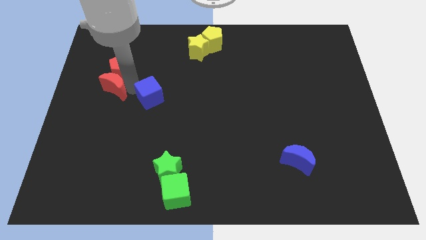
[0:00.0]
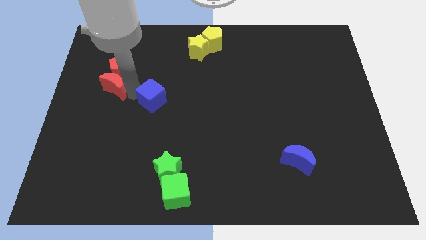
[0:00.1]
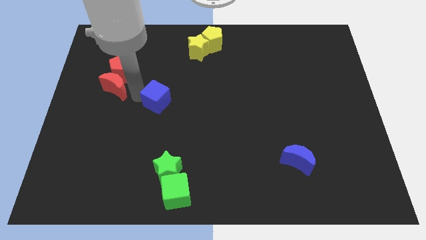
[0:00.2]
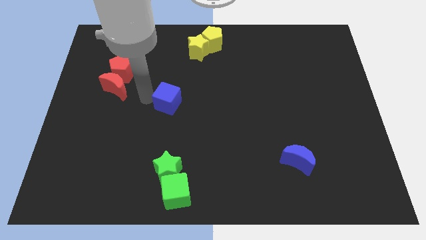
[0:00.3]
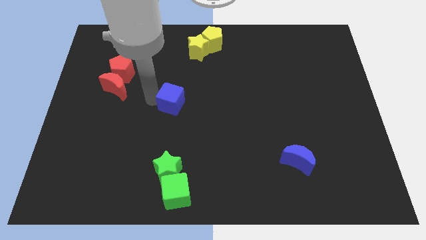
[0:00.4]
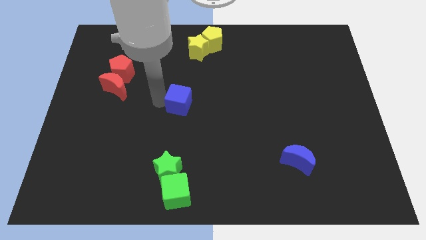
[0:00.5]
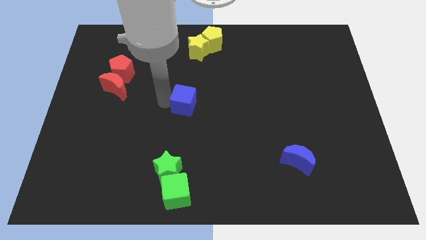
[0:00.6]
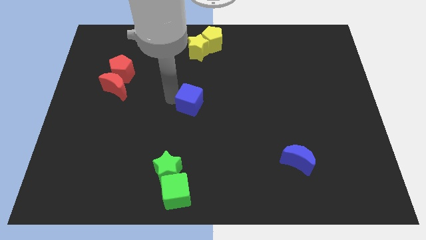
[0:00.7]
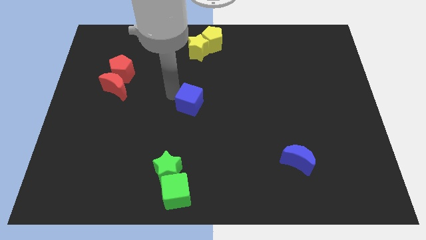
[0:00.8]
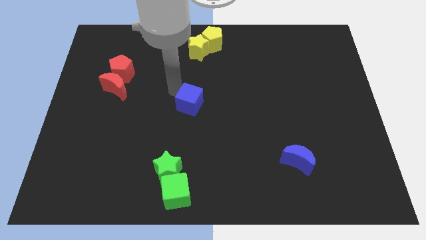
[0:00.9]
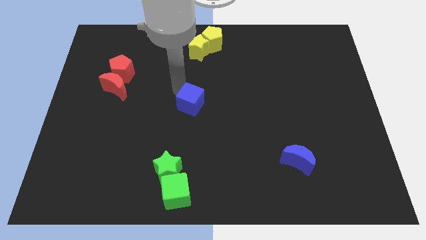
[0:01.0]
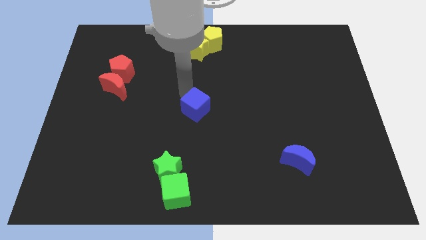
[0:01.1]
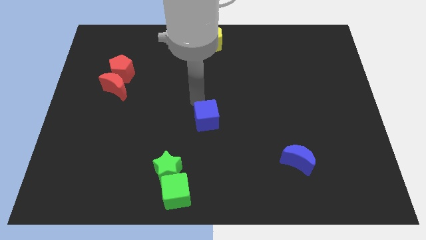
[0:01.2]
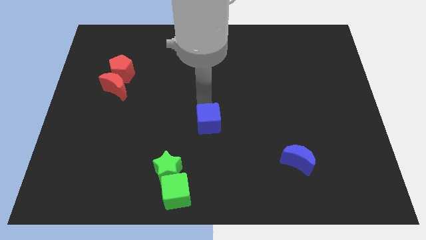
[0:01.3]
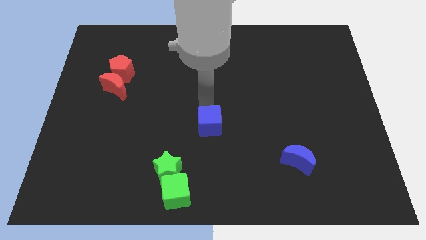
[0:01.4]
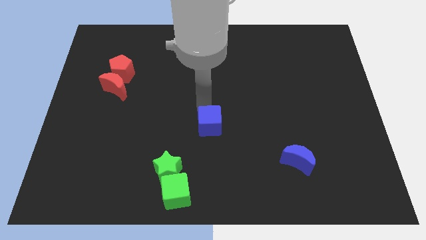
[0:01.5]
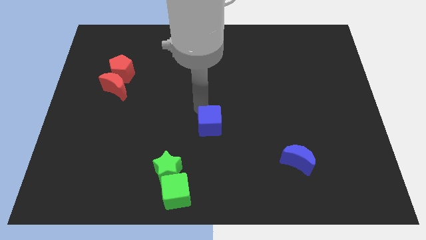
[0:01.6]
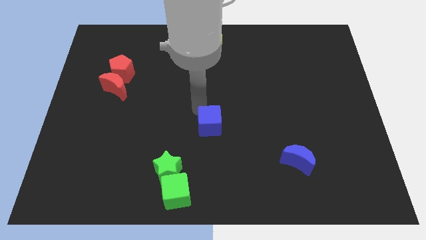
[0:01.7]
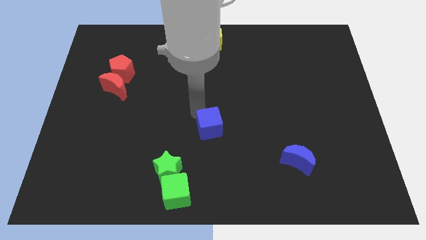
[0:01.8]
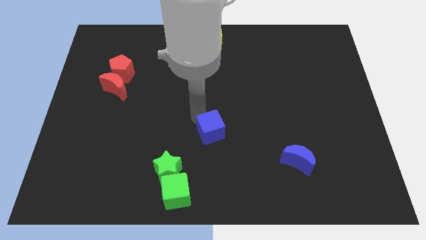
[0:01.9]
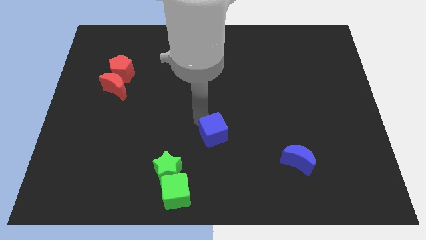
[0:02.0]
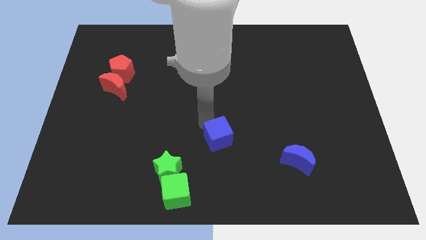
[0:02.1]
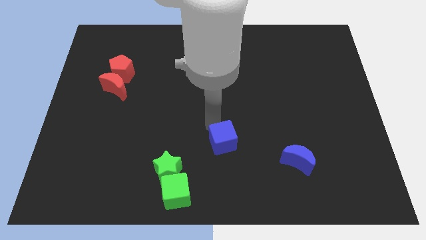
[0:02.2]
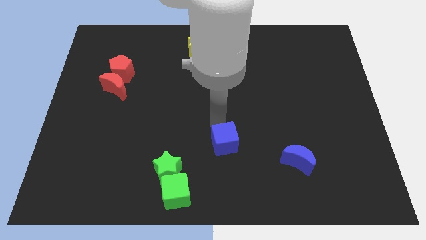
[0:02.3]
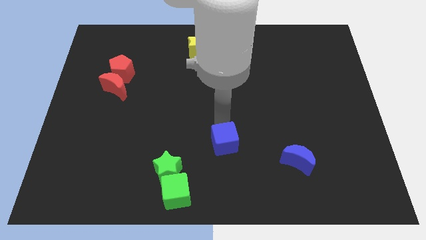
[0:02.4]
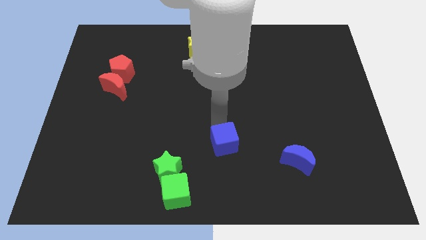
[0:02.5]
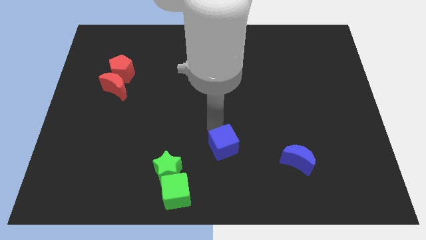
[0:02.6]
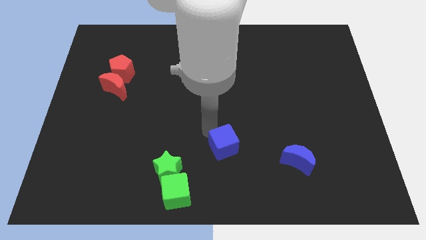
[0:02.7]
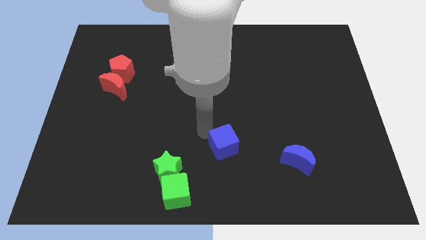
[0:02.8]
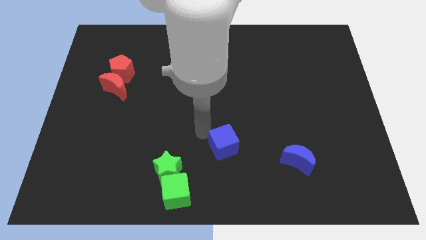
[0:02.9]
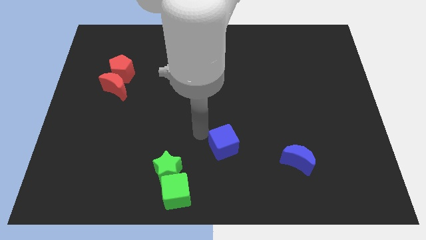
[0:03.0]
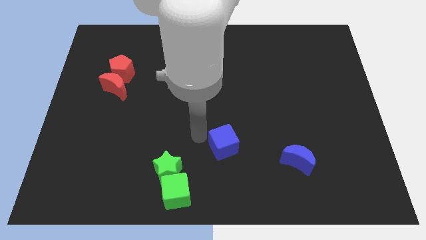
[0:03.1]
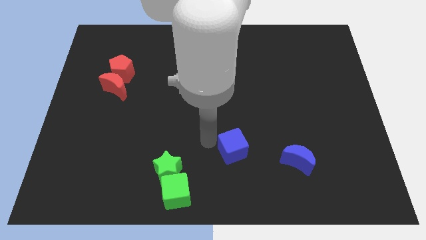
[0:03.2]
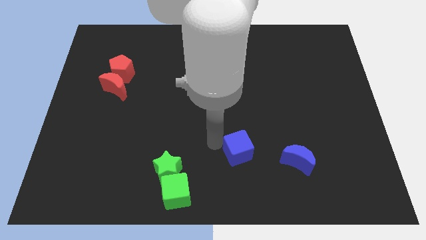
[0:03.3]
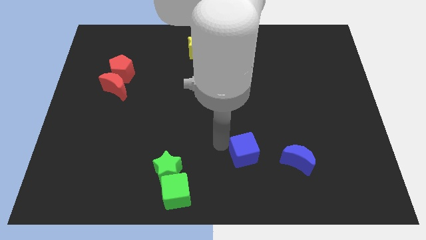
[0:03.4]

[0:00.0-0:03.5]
move the blue cube left beside the blue moon

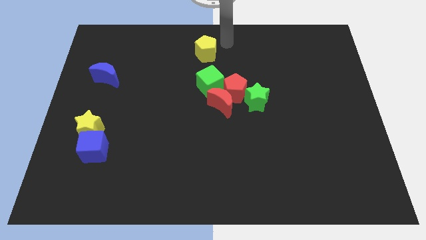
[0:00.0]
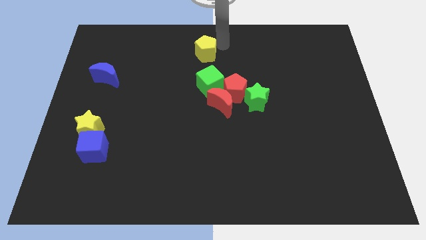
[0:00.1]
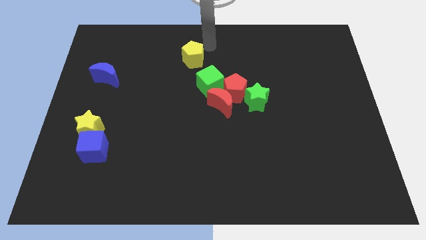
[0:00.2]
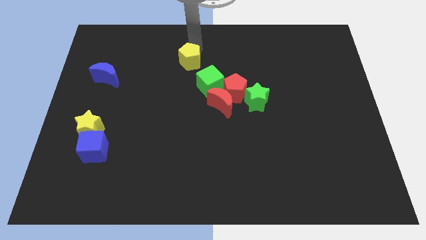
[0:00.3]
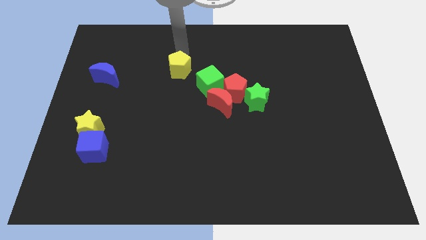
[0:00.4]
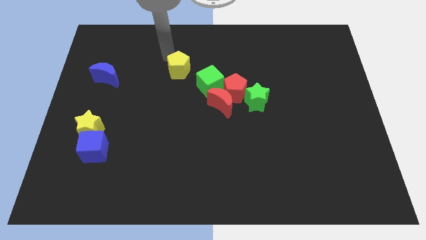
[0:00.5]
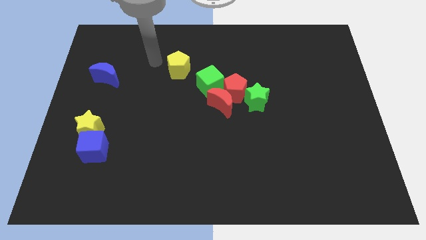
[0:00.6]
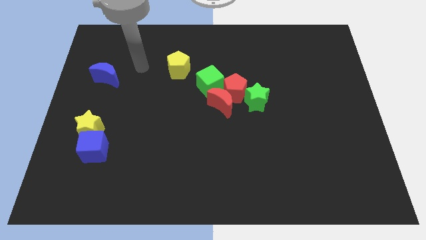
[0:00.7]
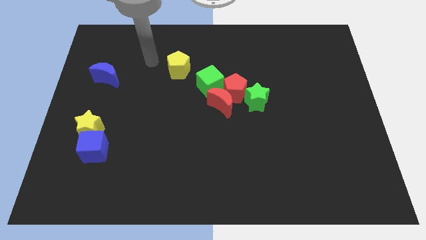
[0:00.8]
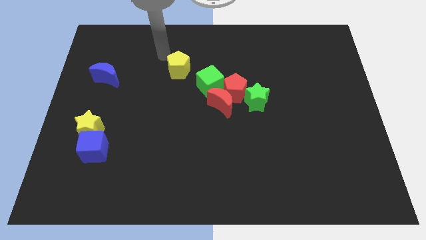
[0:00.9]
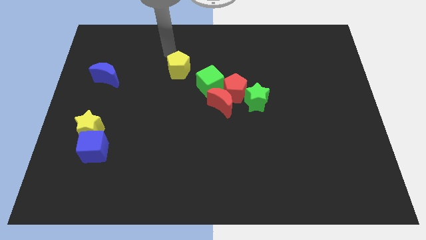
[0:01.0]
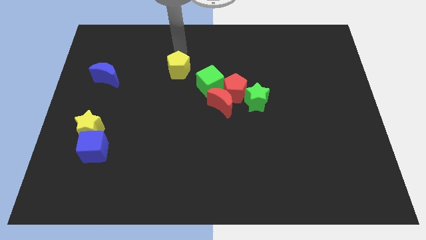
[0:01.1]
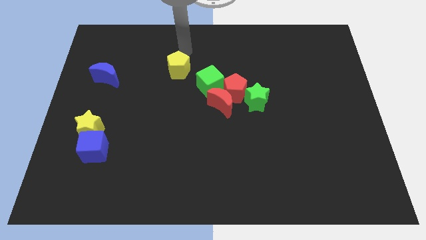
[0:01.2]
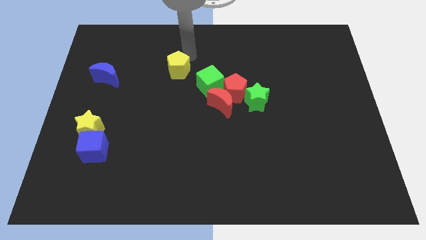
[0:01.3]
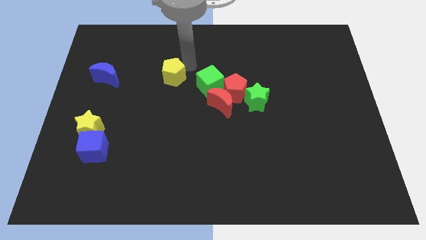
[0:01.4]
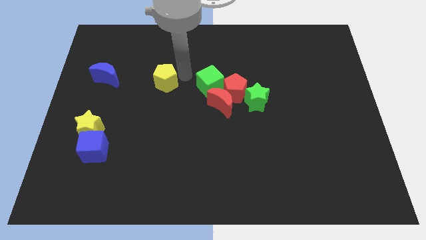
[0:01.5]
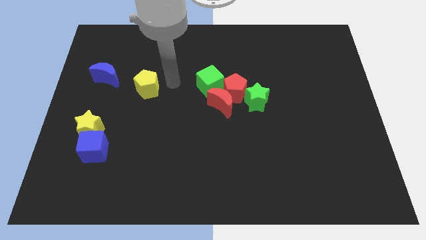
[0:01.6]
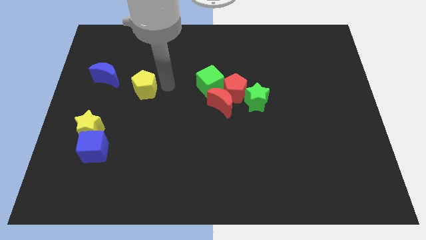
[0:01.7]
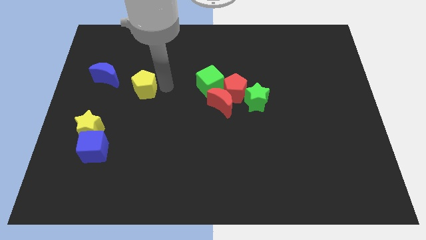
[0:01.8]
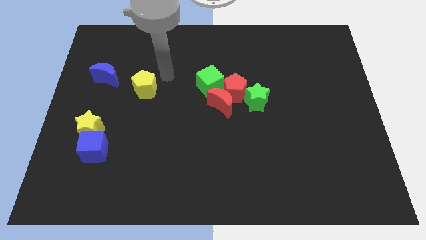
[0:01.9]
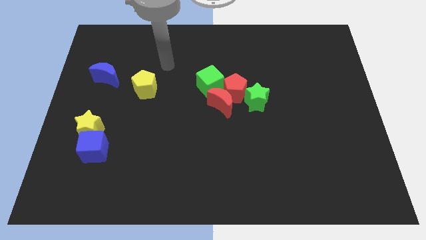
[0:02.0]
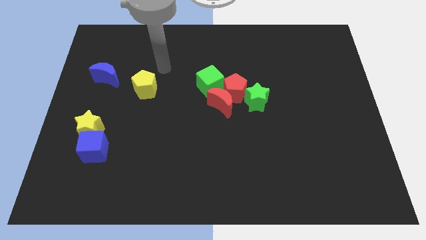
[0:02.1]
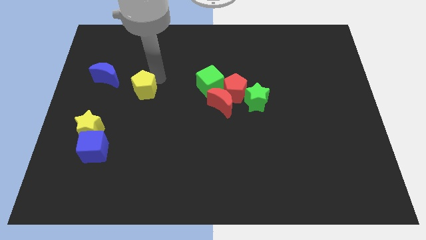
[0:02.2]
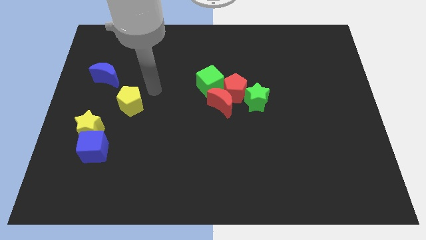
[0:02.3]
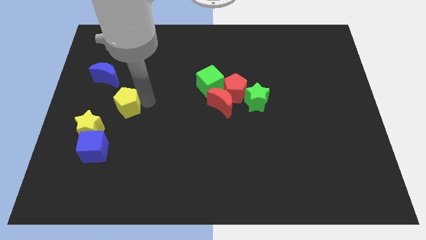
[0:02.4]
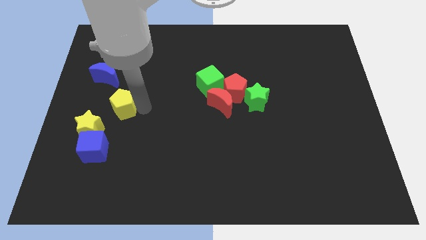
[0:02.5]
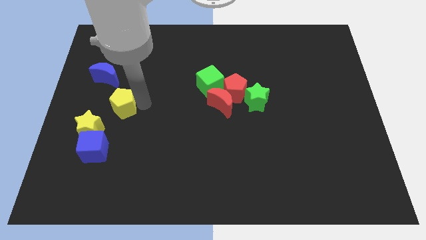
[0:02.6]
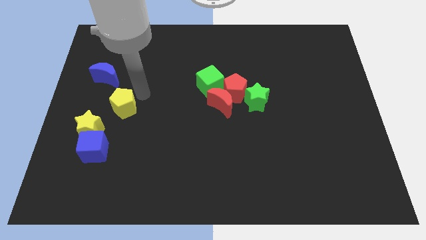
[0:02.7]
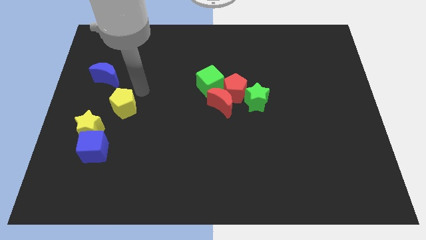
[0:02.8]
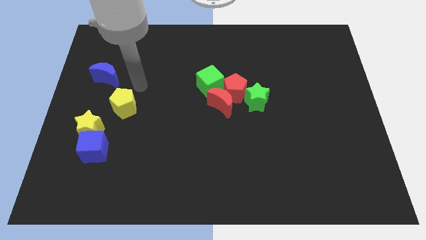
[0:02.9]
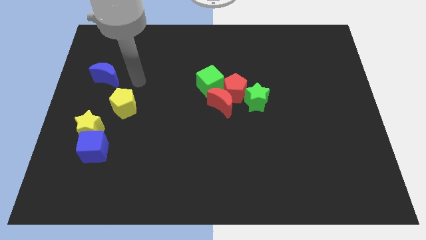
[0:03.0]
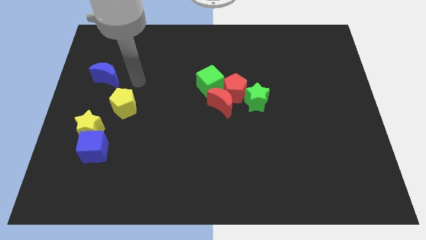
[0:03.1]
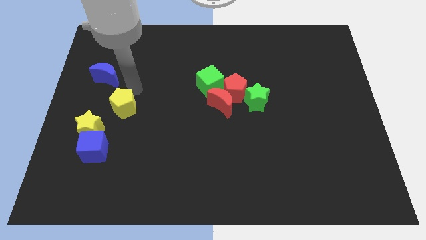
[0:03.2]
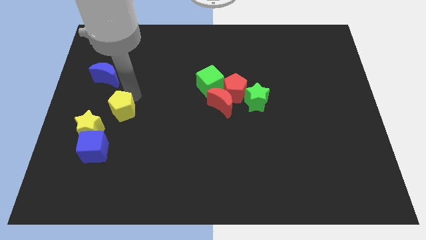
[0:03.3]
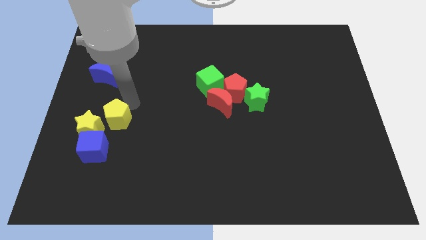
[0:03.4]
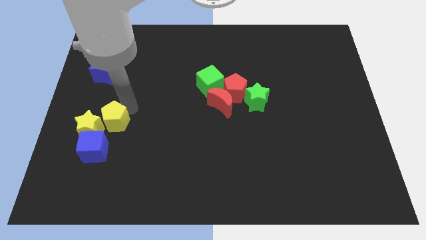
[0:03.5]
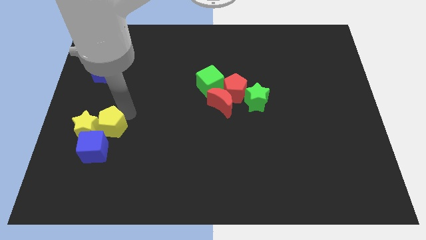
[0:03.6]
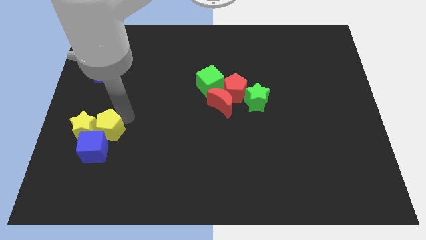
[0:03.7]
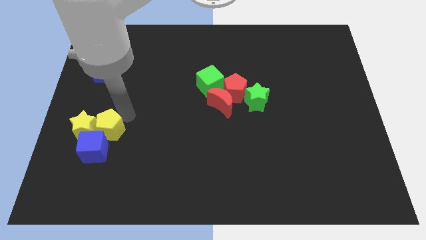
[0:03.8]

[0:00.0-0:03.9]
push the yellow pentagon to the right side of the yellow star

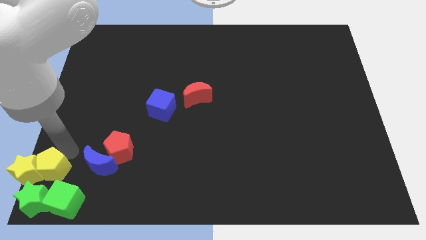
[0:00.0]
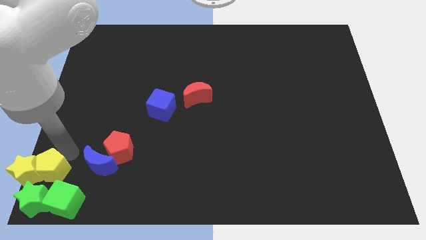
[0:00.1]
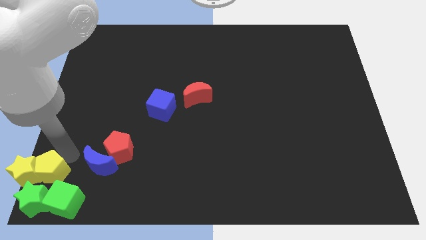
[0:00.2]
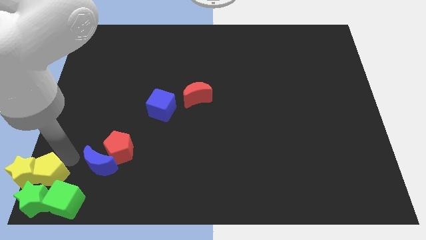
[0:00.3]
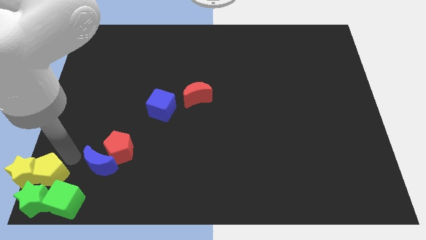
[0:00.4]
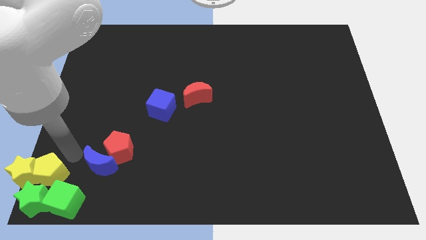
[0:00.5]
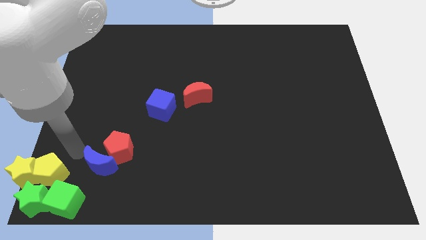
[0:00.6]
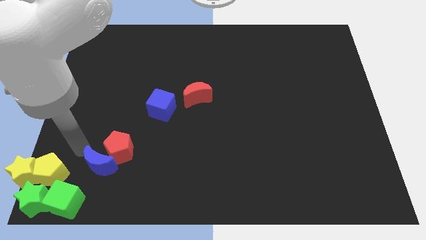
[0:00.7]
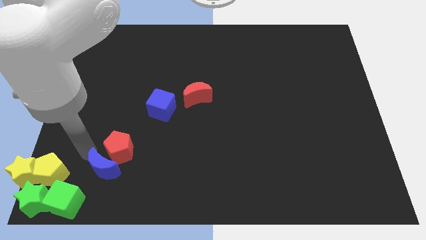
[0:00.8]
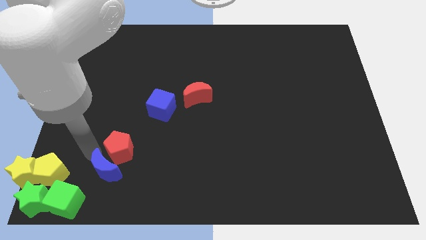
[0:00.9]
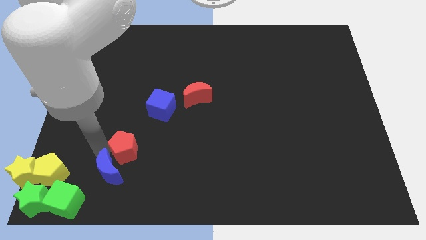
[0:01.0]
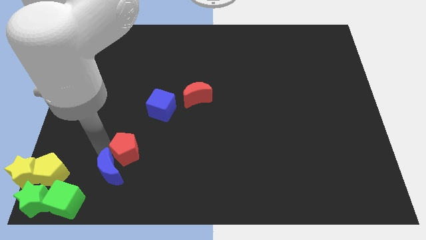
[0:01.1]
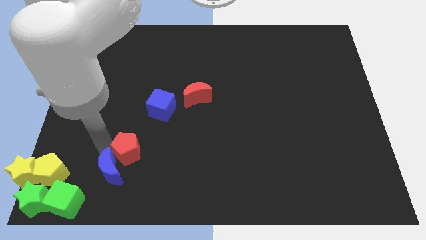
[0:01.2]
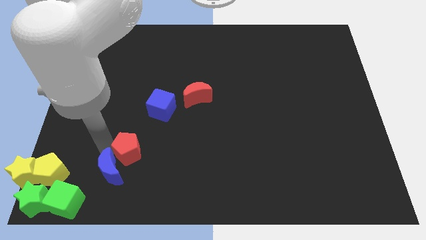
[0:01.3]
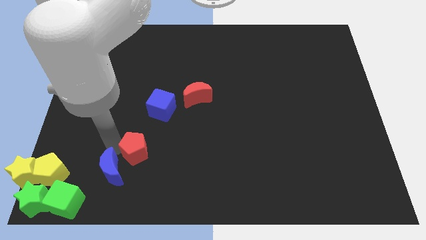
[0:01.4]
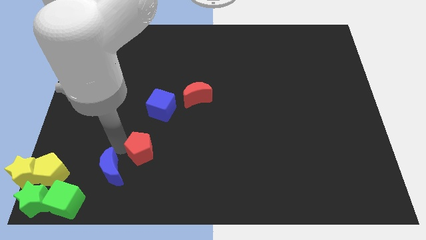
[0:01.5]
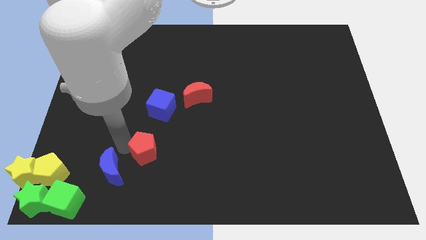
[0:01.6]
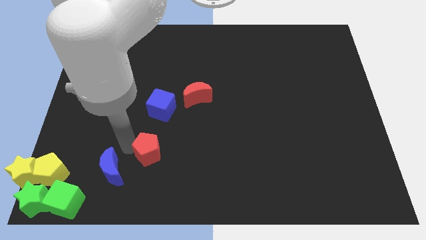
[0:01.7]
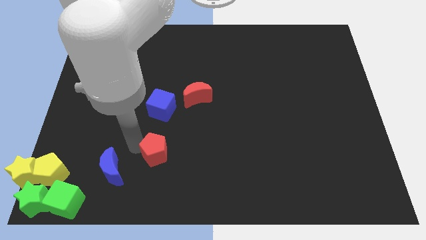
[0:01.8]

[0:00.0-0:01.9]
slightly move the red pentagon to the right
